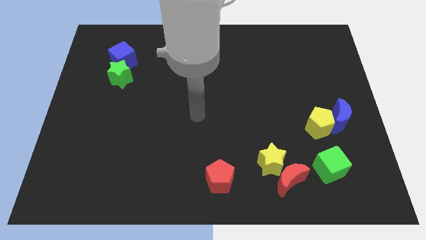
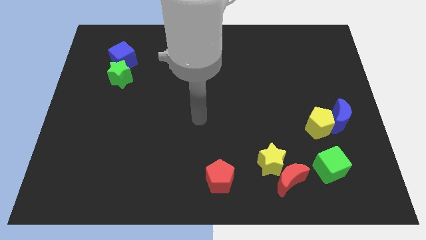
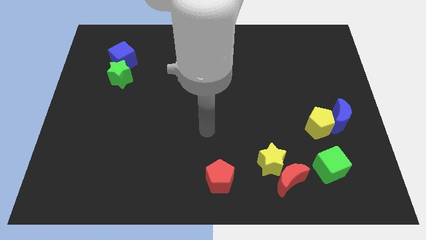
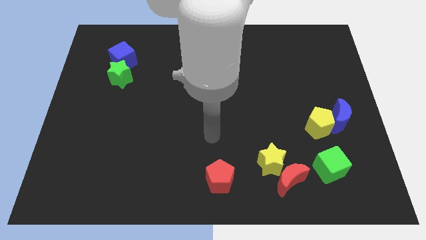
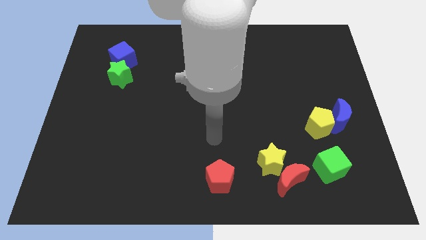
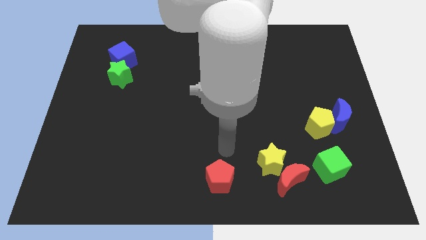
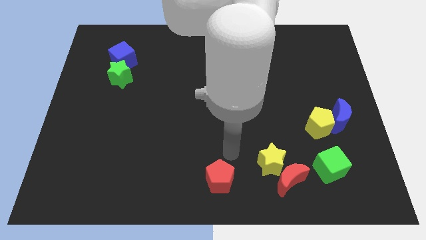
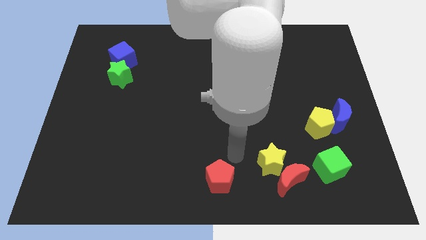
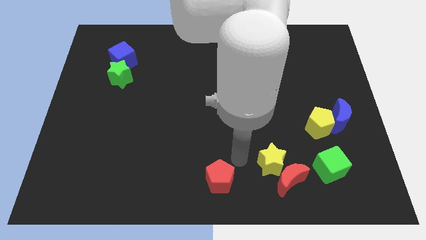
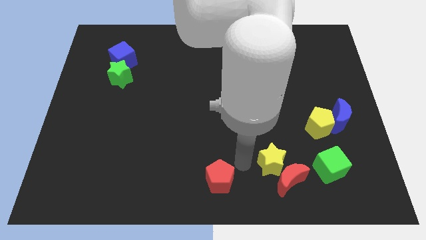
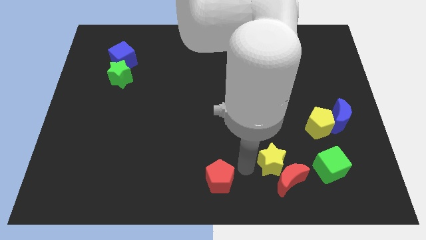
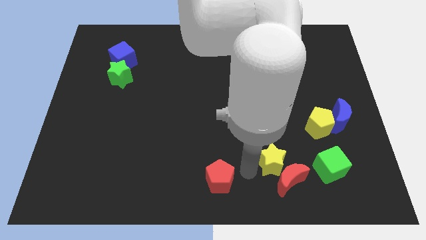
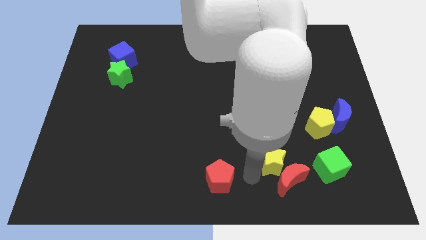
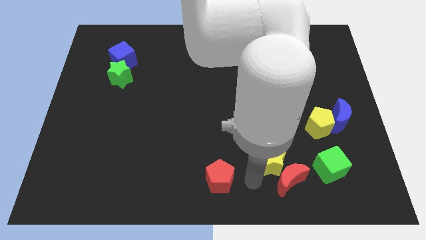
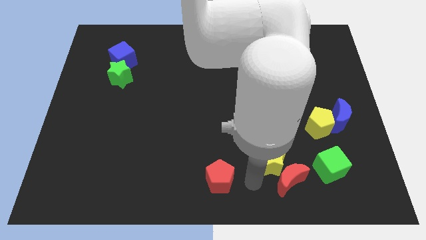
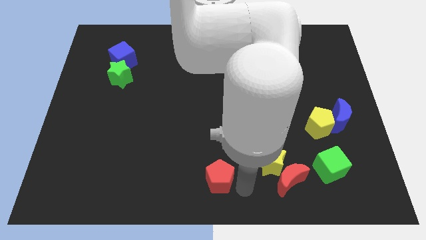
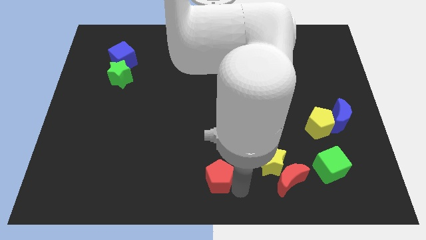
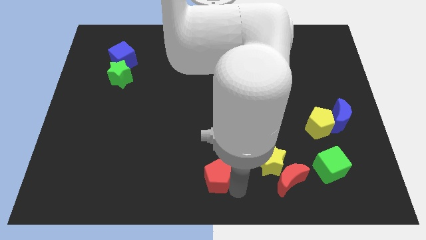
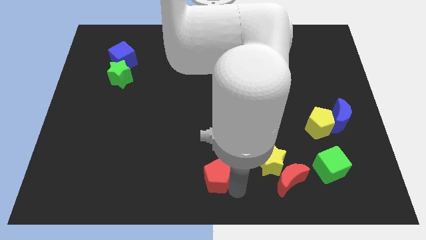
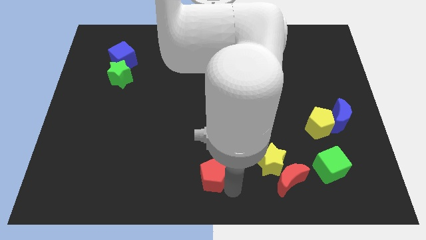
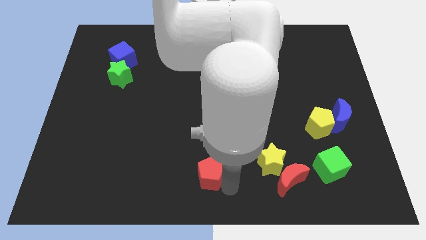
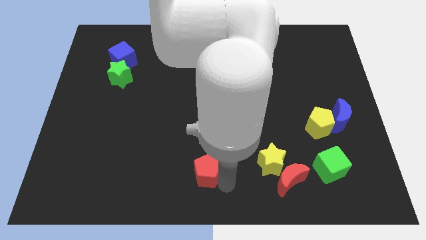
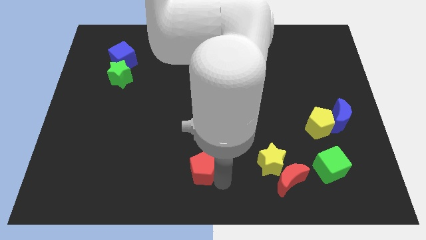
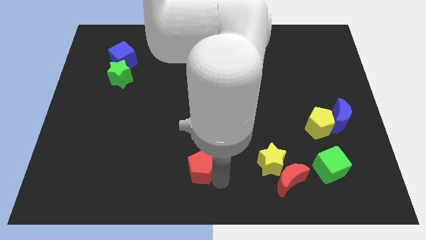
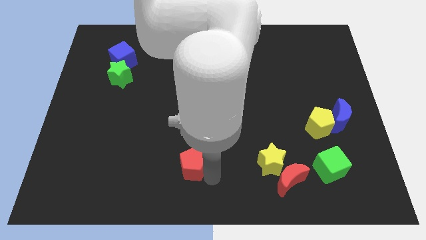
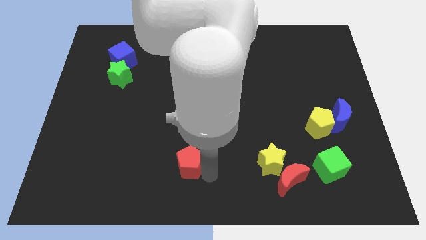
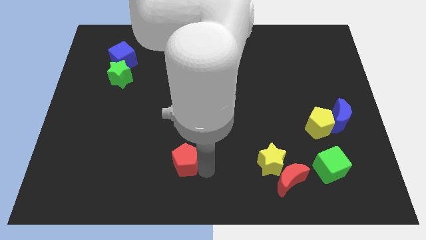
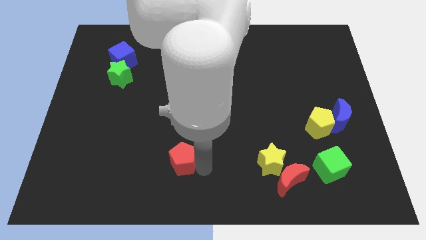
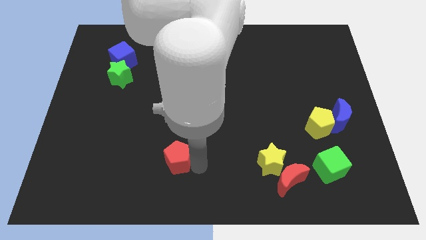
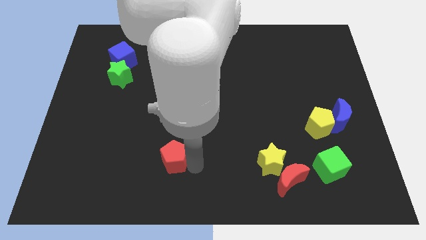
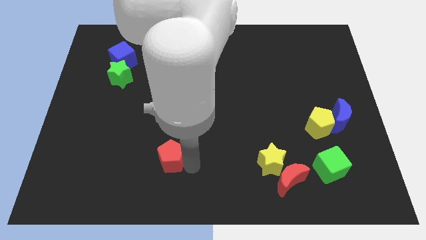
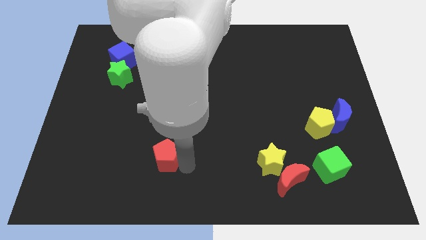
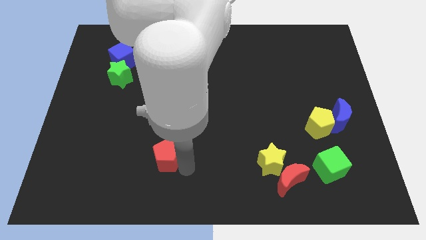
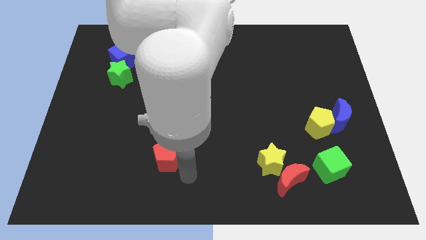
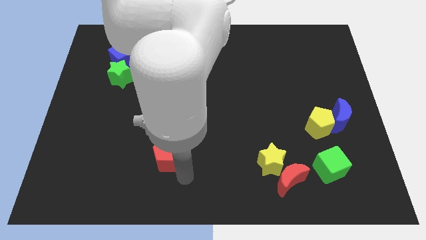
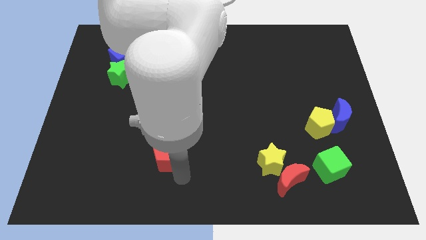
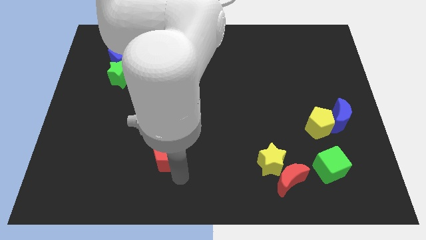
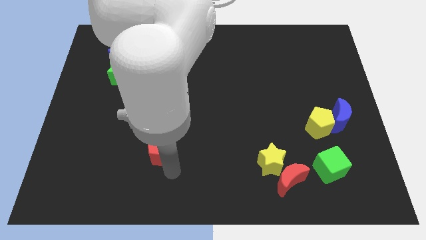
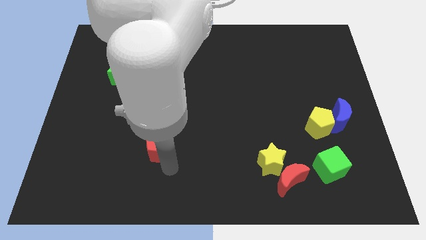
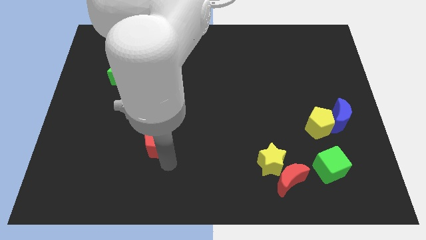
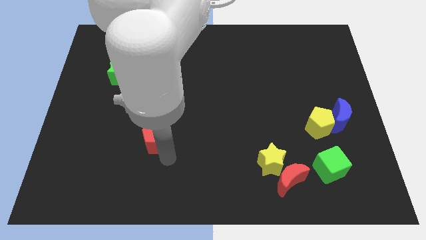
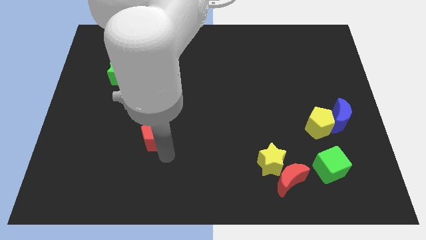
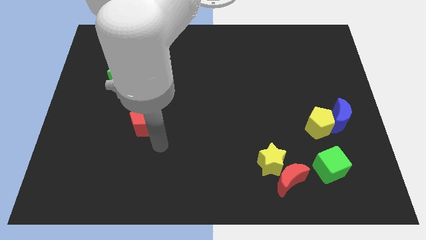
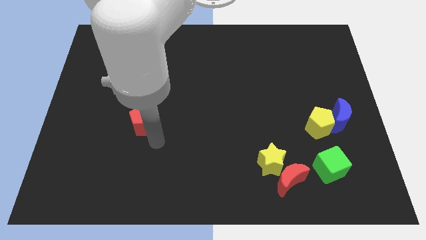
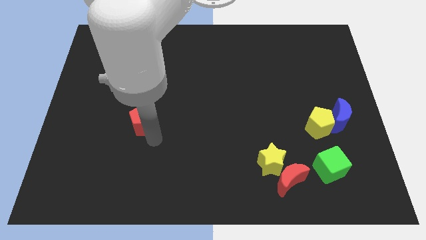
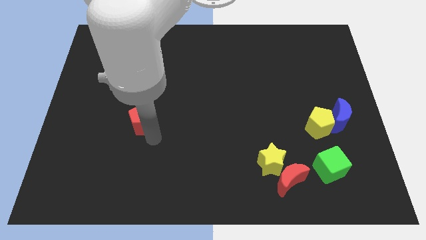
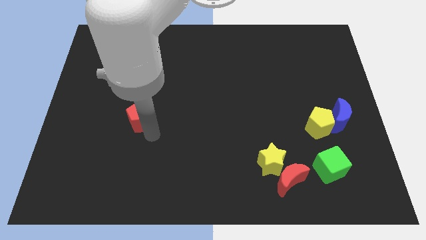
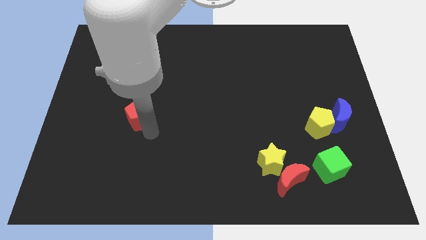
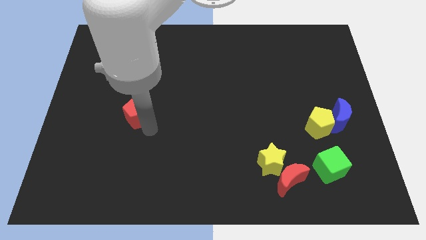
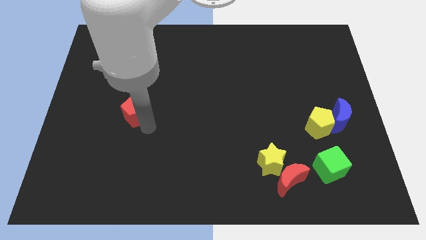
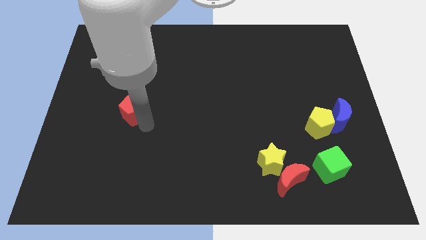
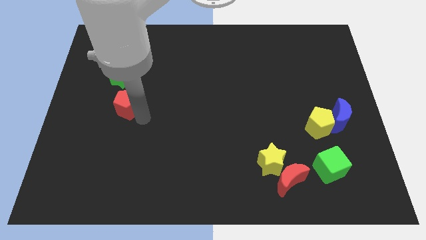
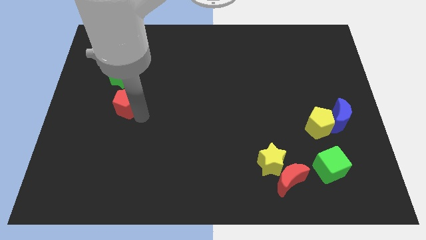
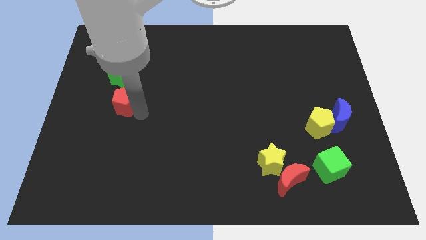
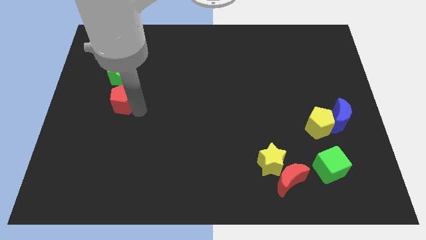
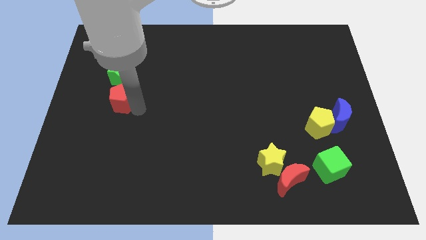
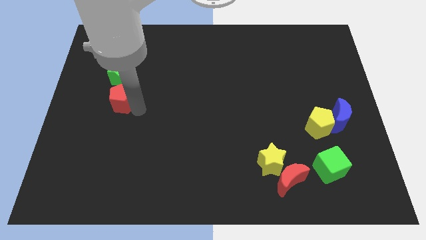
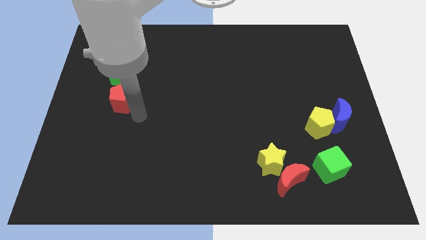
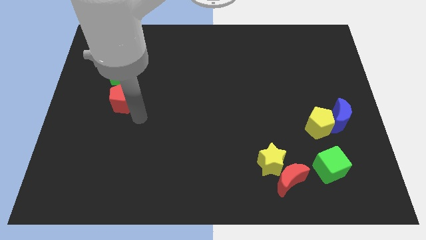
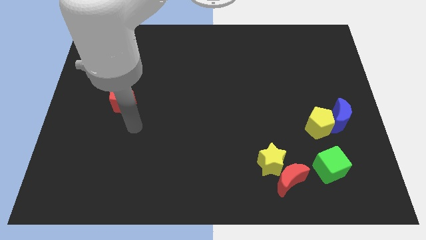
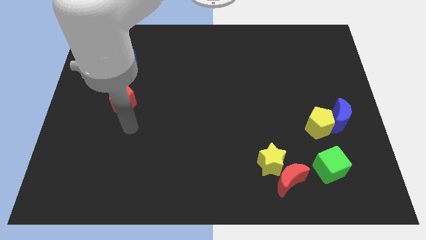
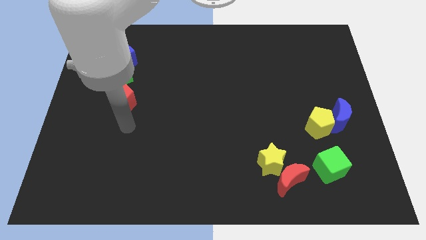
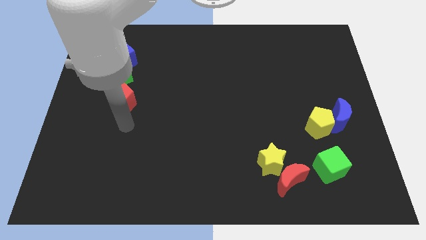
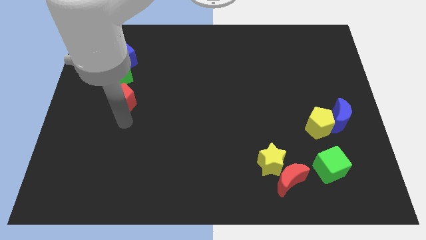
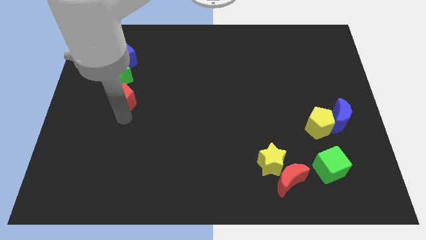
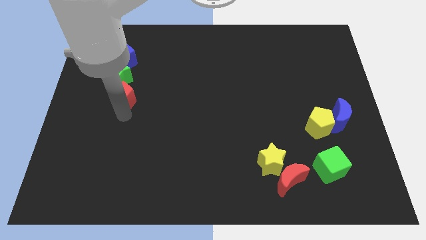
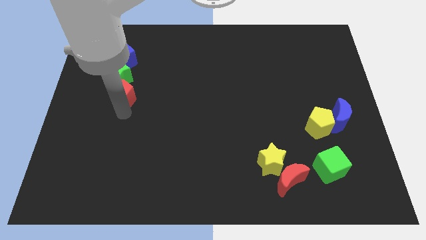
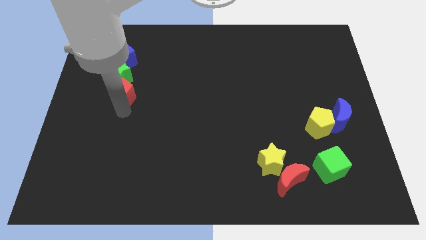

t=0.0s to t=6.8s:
put the red pentagon towards the green star

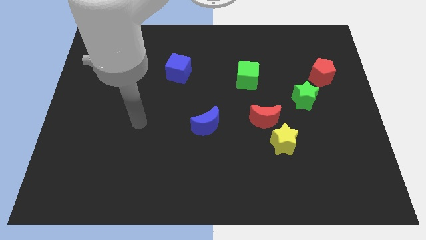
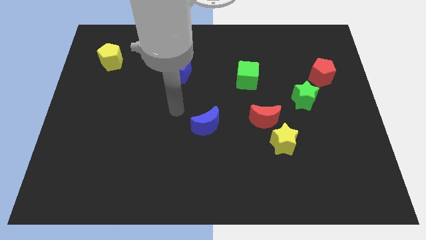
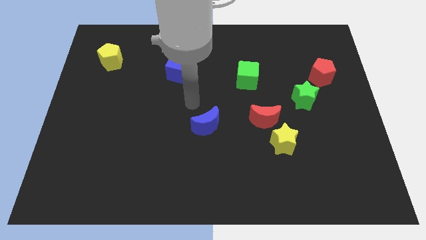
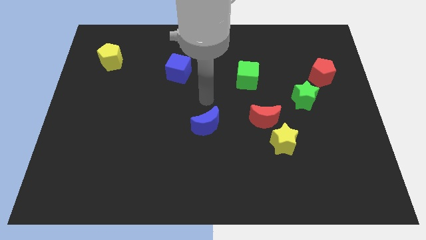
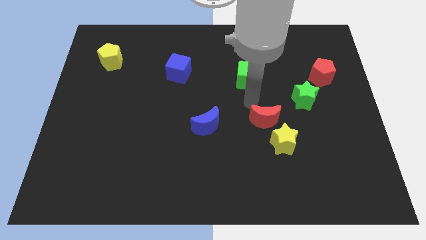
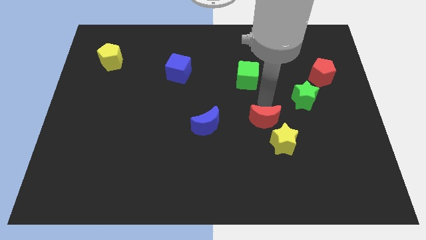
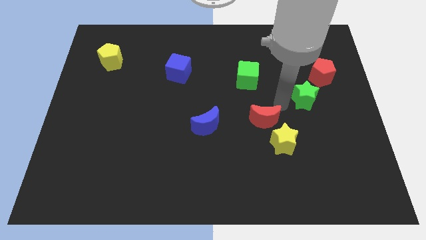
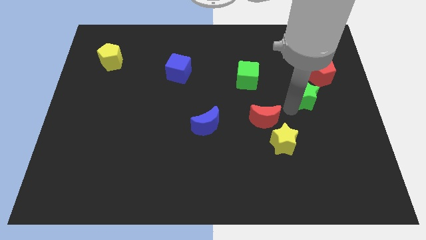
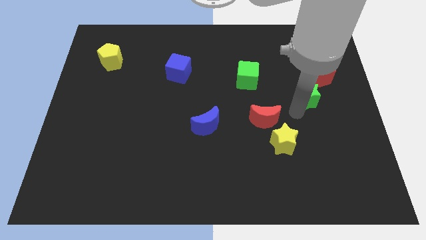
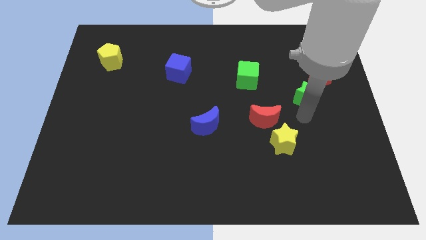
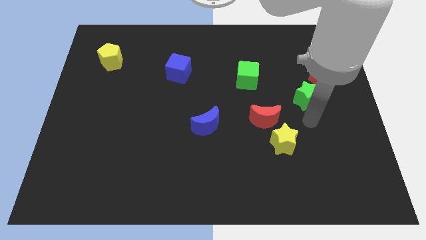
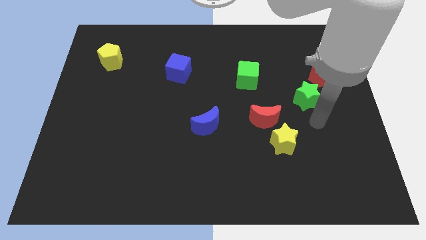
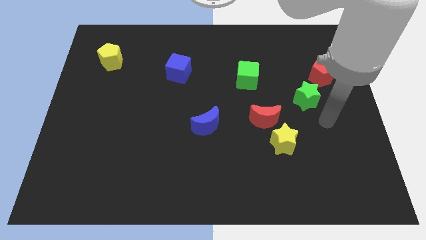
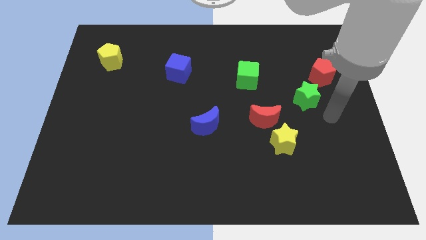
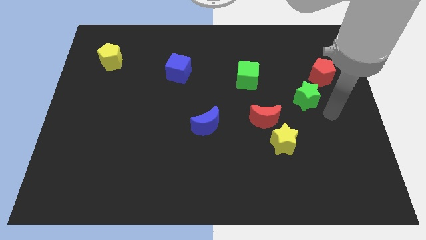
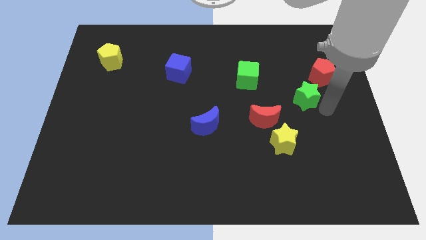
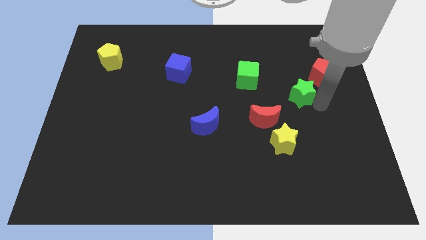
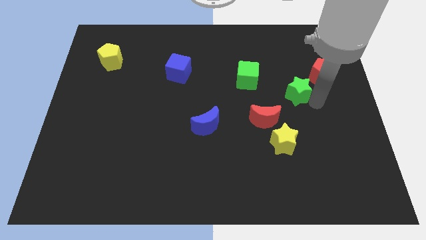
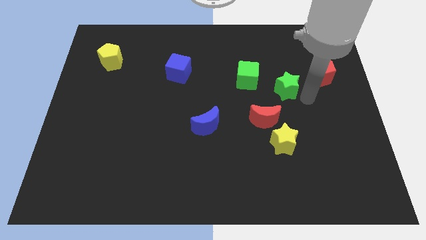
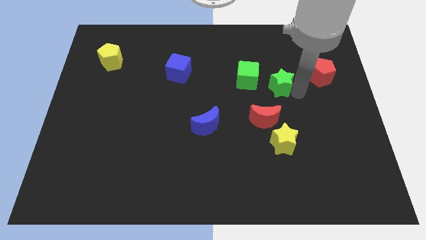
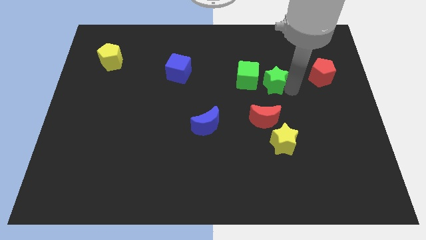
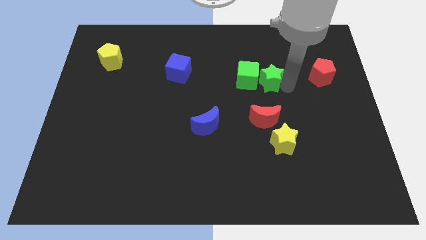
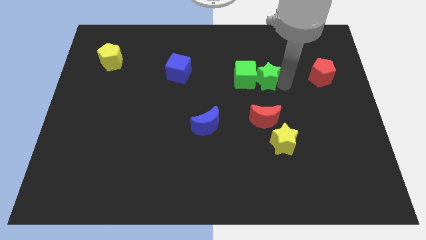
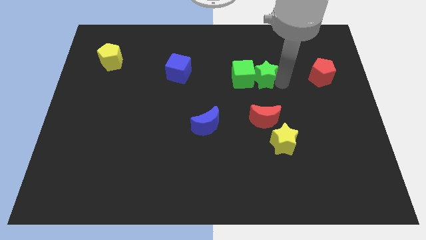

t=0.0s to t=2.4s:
push the green star close to the green cube
